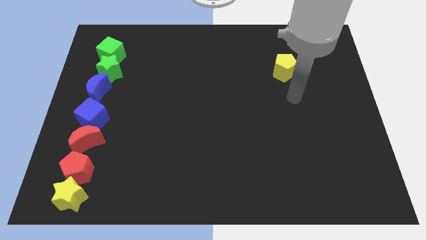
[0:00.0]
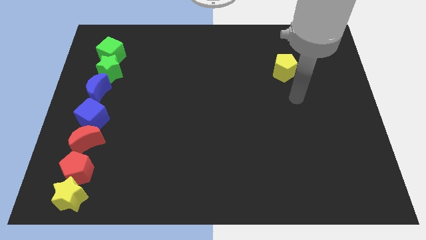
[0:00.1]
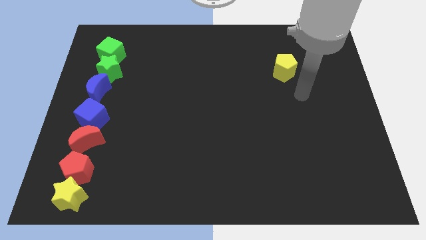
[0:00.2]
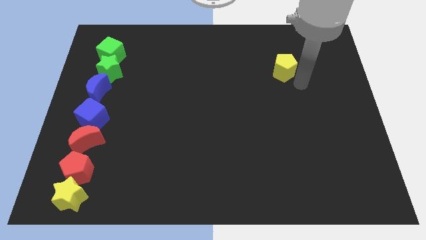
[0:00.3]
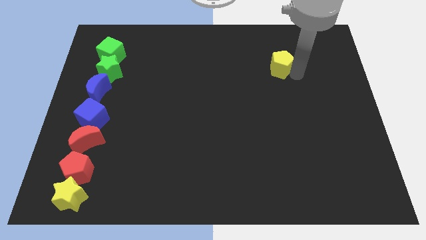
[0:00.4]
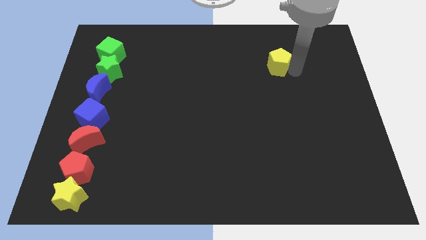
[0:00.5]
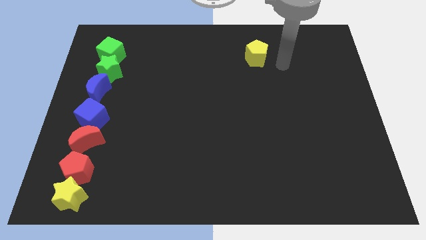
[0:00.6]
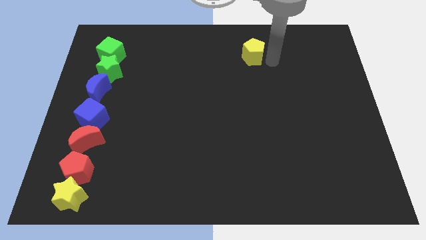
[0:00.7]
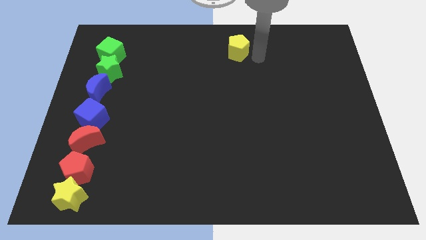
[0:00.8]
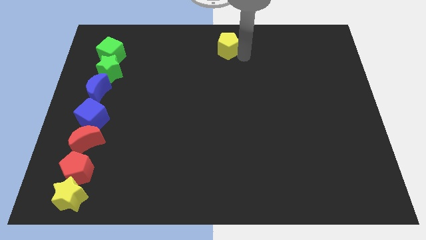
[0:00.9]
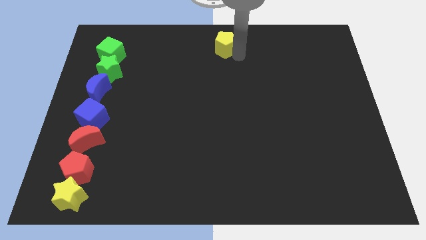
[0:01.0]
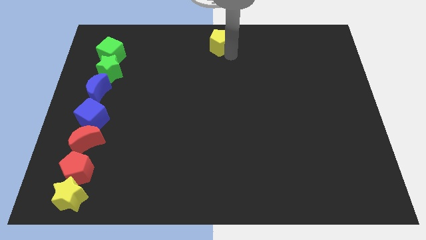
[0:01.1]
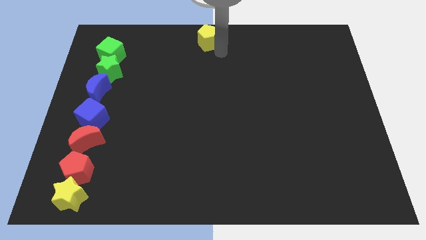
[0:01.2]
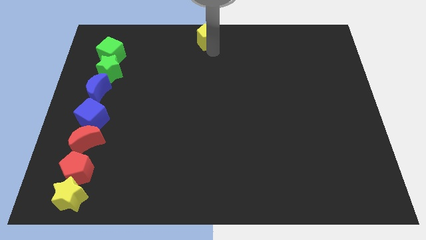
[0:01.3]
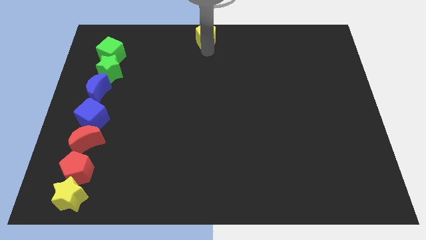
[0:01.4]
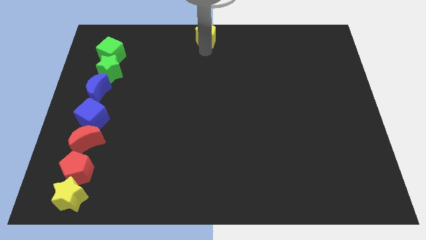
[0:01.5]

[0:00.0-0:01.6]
put the yellow pentagon at the top center of the table

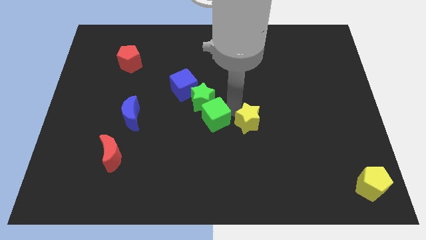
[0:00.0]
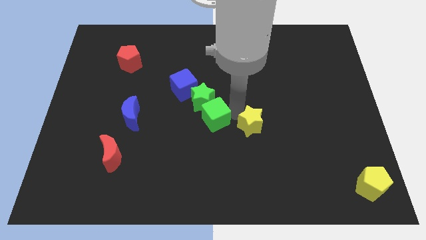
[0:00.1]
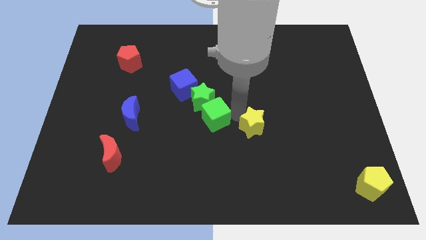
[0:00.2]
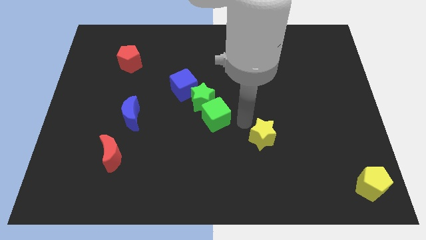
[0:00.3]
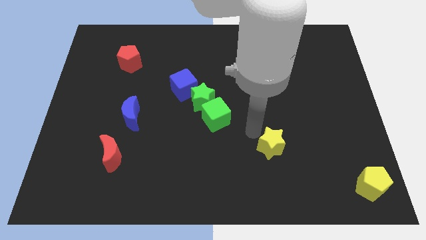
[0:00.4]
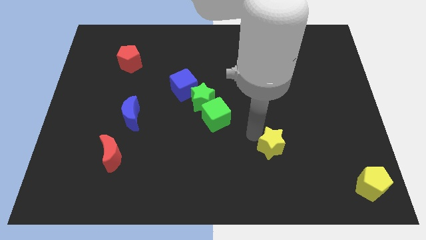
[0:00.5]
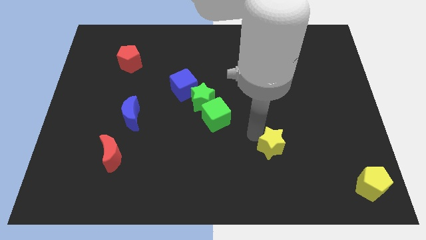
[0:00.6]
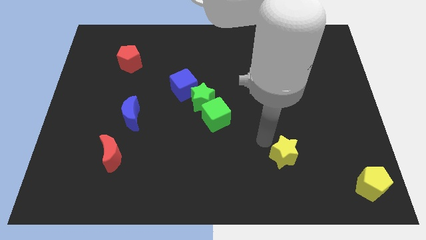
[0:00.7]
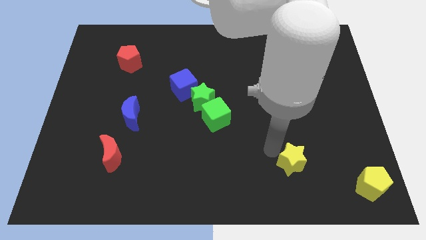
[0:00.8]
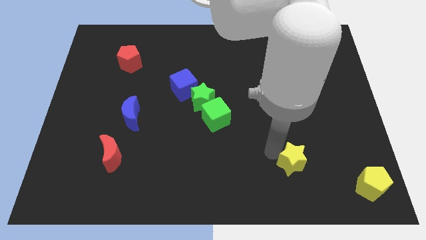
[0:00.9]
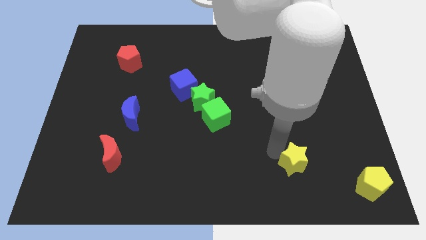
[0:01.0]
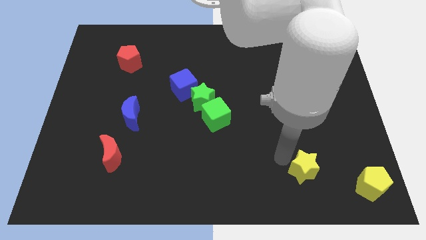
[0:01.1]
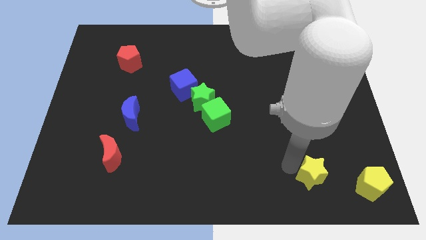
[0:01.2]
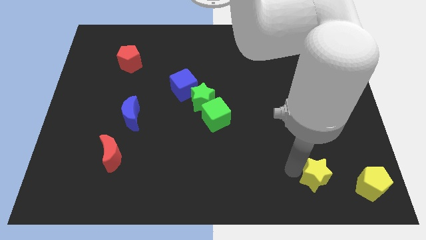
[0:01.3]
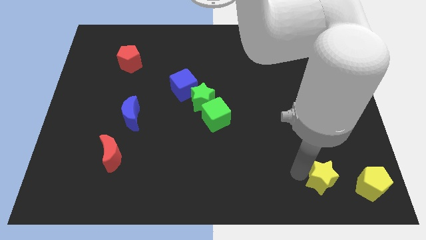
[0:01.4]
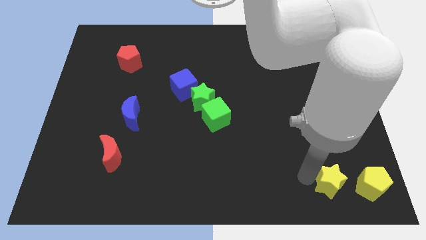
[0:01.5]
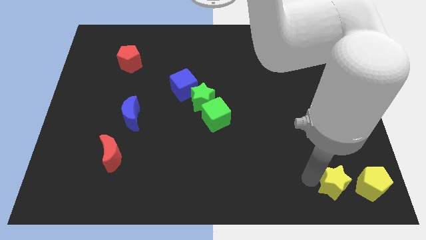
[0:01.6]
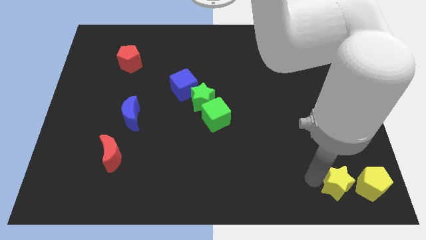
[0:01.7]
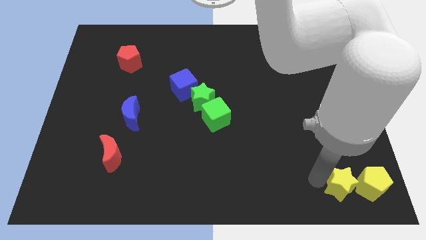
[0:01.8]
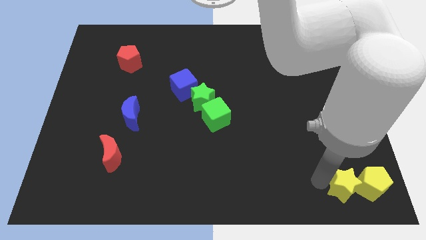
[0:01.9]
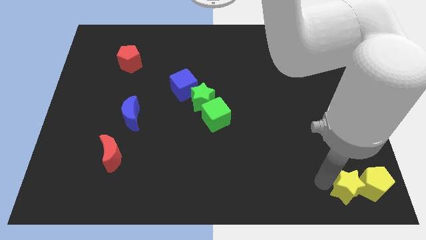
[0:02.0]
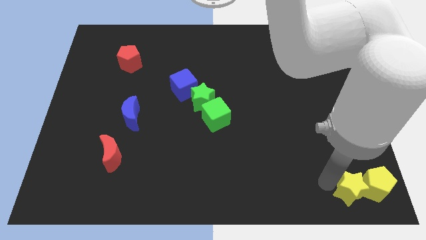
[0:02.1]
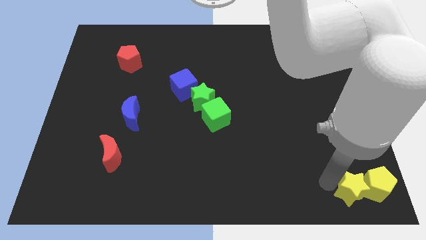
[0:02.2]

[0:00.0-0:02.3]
put yellow blocks together

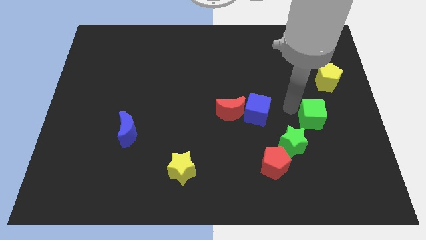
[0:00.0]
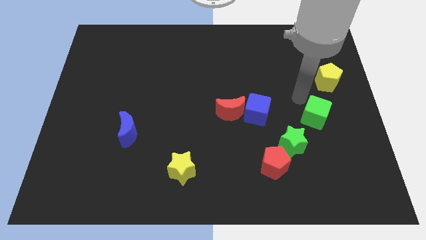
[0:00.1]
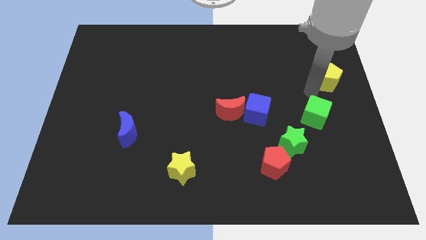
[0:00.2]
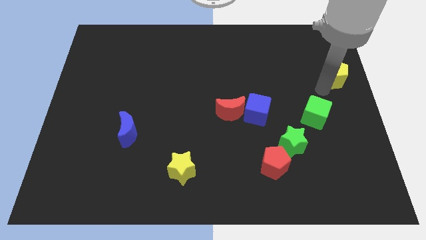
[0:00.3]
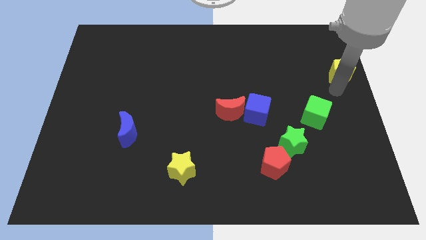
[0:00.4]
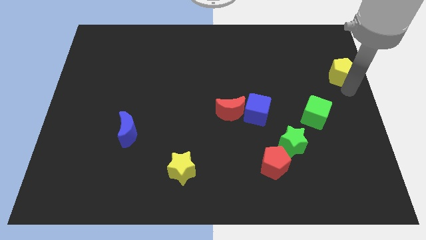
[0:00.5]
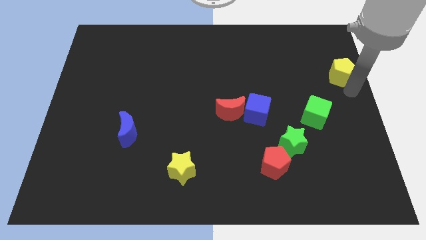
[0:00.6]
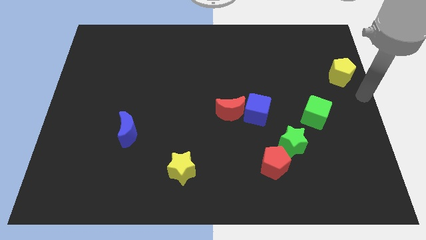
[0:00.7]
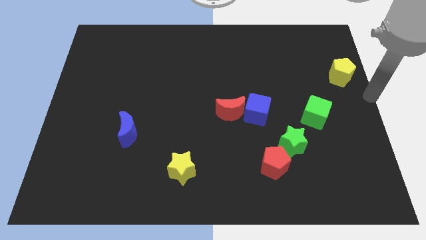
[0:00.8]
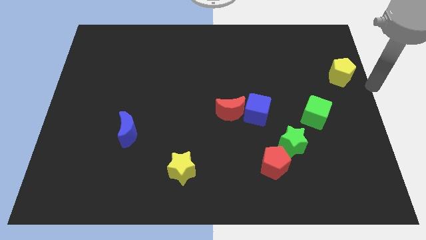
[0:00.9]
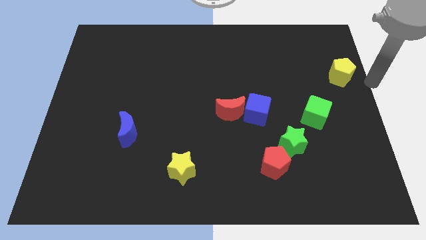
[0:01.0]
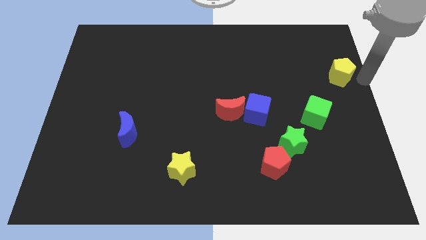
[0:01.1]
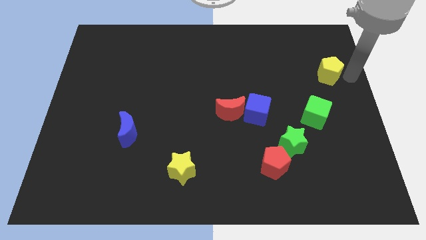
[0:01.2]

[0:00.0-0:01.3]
slightly move the yellow pentagon diagonally up

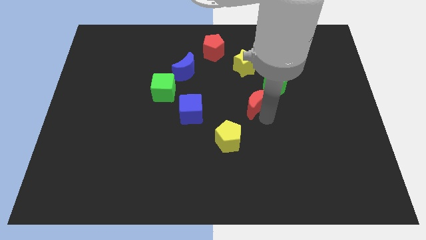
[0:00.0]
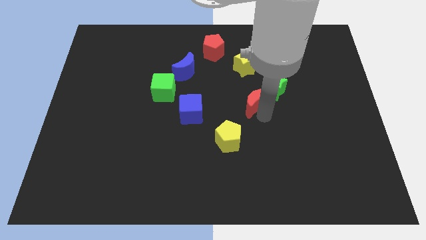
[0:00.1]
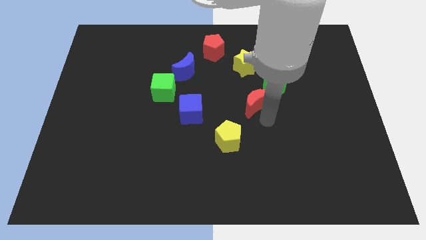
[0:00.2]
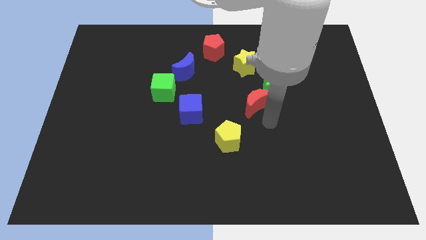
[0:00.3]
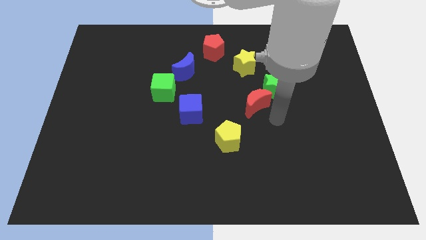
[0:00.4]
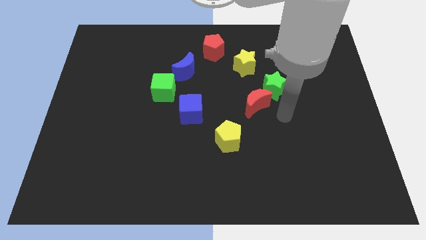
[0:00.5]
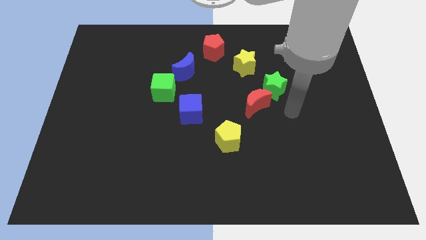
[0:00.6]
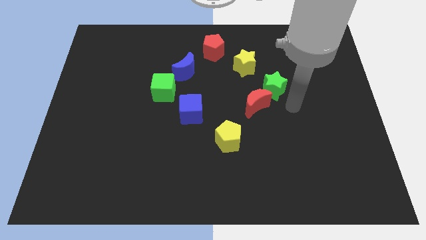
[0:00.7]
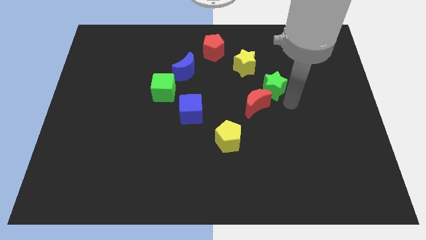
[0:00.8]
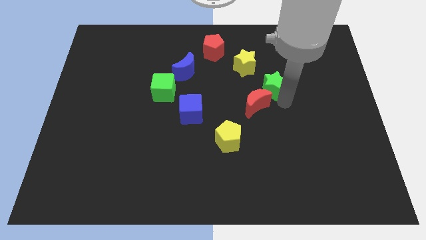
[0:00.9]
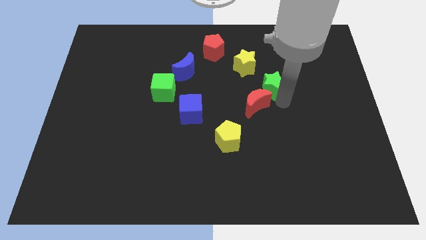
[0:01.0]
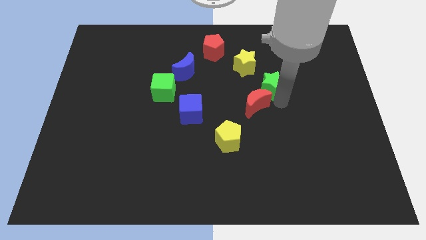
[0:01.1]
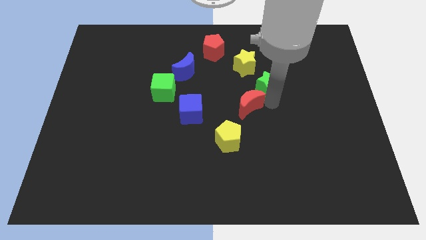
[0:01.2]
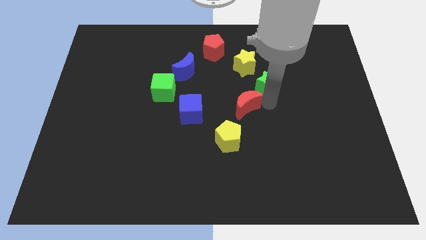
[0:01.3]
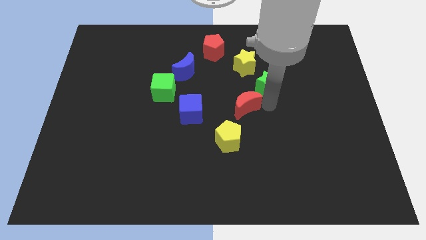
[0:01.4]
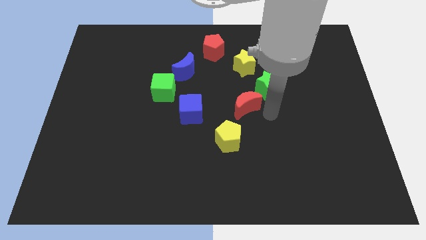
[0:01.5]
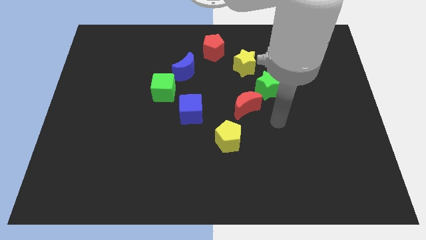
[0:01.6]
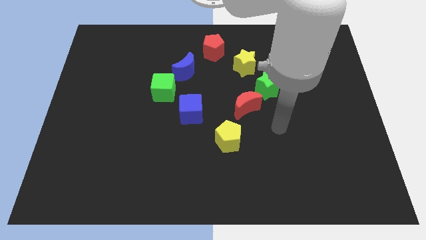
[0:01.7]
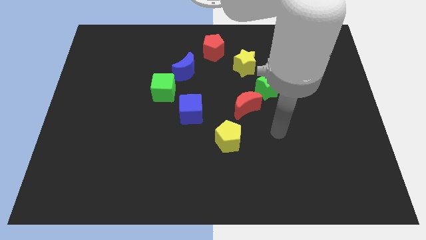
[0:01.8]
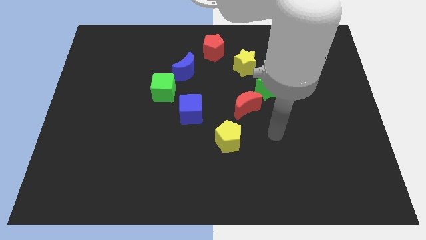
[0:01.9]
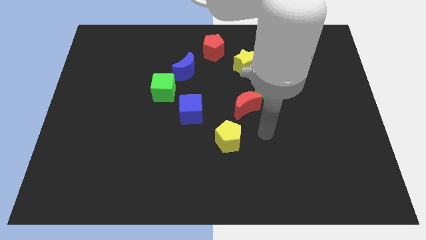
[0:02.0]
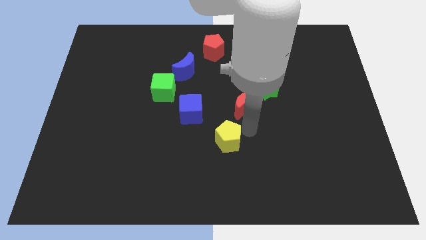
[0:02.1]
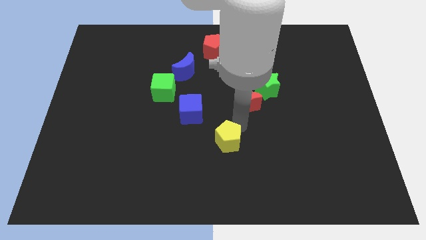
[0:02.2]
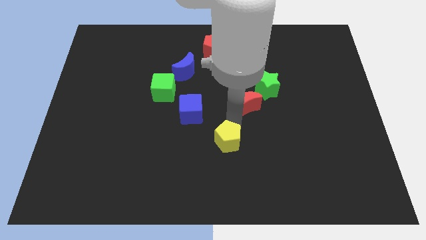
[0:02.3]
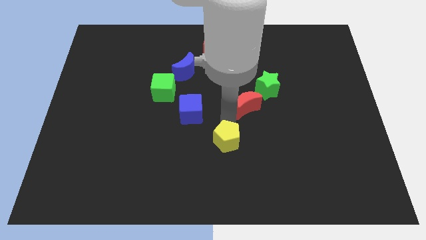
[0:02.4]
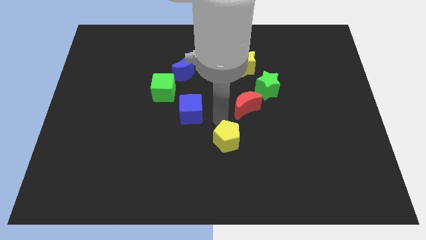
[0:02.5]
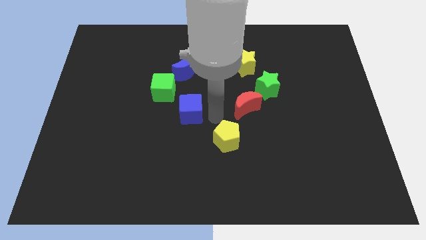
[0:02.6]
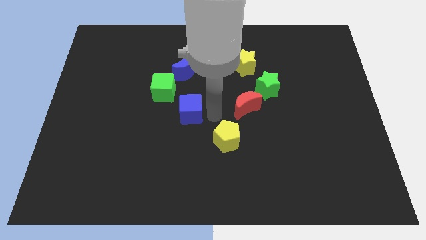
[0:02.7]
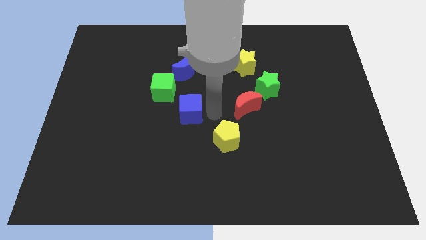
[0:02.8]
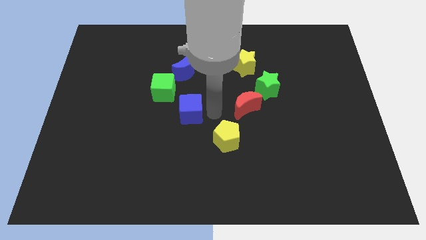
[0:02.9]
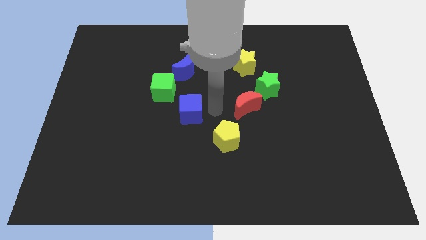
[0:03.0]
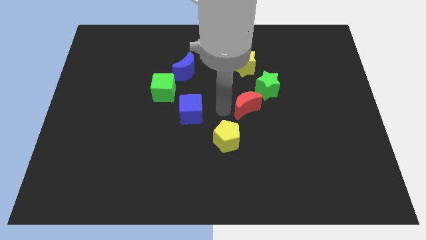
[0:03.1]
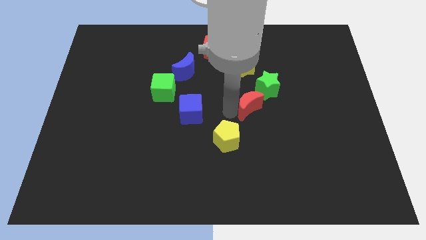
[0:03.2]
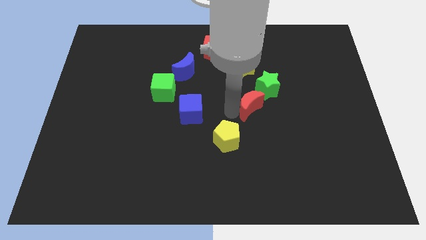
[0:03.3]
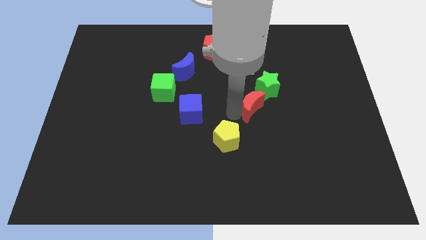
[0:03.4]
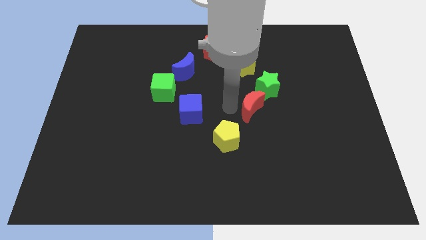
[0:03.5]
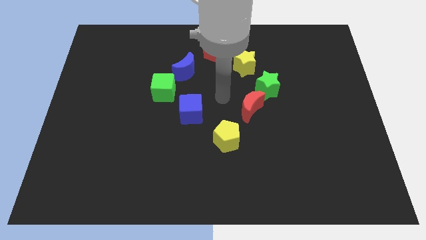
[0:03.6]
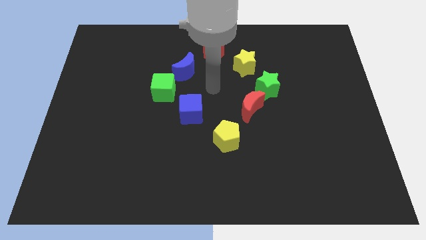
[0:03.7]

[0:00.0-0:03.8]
move the red moon diagonally in between the green star and yellow pentagon
